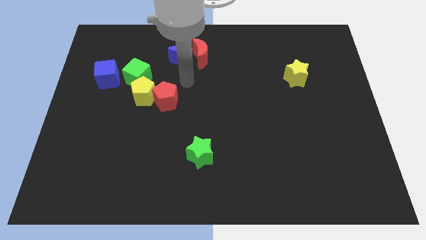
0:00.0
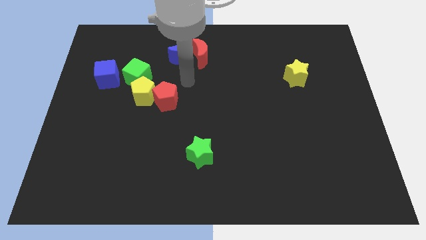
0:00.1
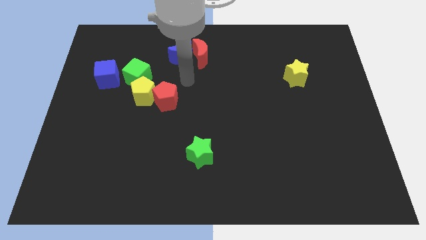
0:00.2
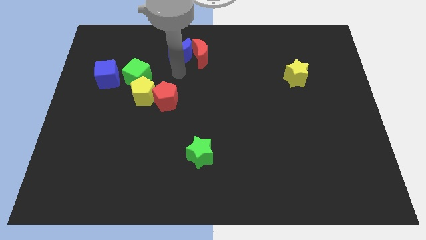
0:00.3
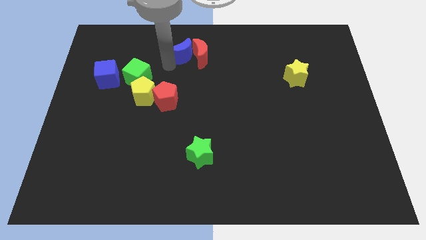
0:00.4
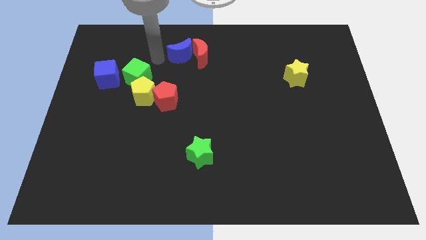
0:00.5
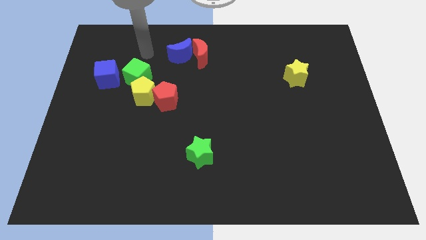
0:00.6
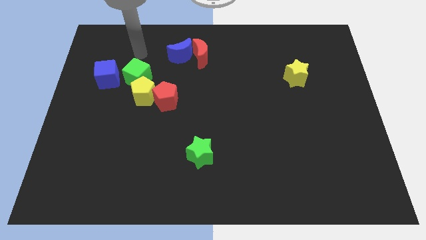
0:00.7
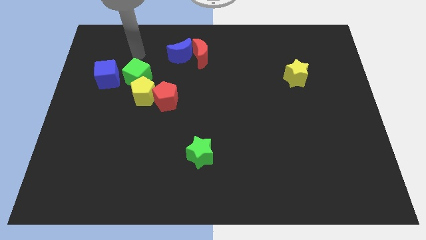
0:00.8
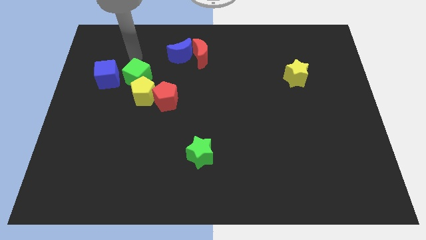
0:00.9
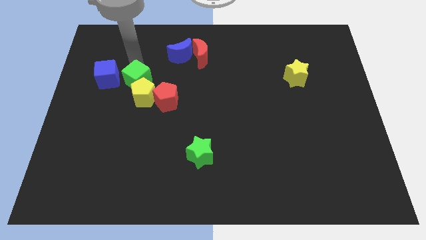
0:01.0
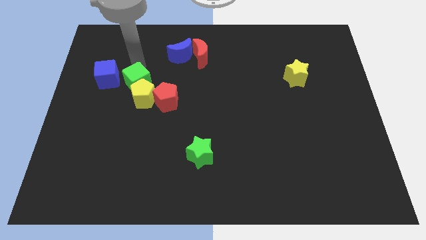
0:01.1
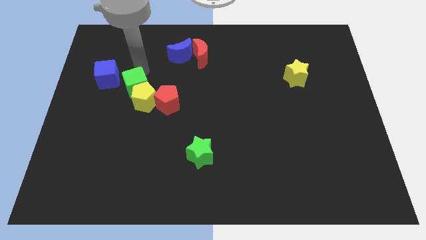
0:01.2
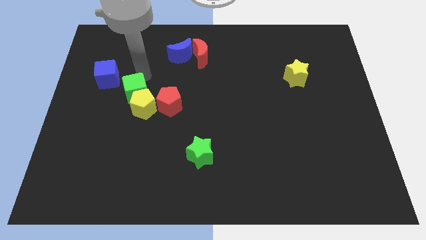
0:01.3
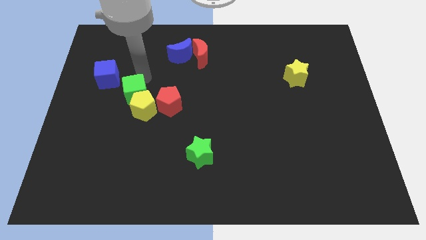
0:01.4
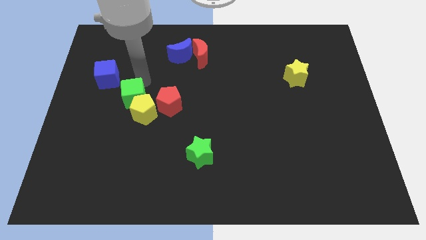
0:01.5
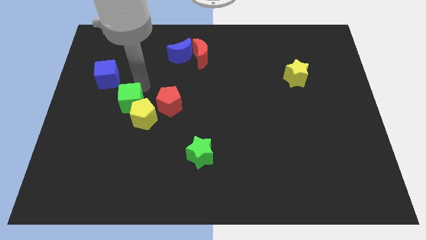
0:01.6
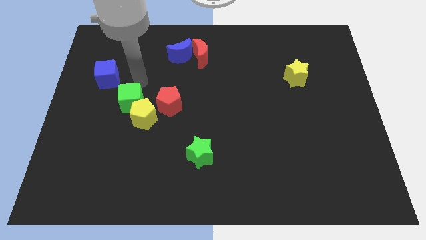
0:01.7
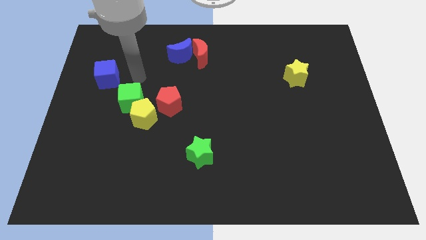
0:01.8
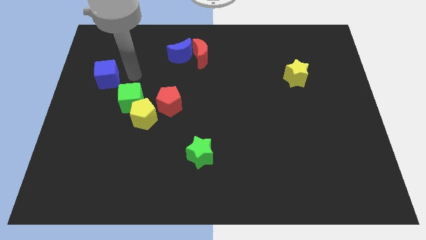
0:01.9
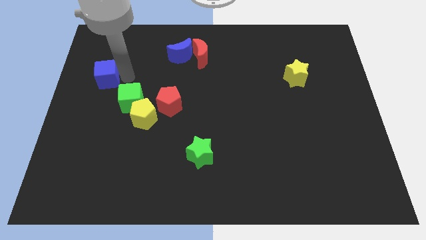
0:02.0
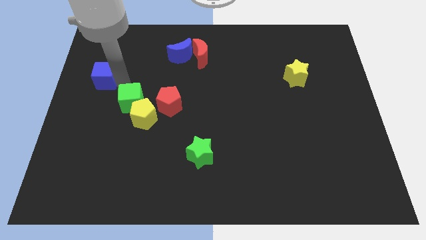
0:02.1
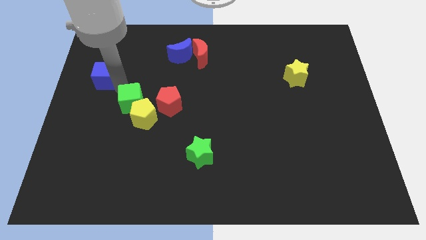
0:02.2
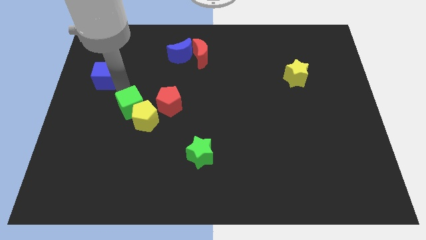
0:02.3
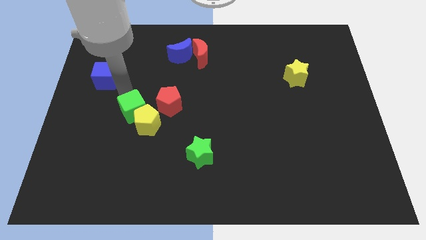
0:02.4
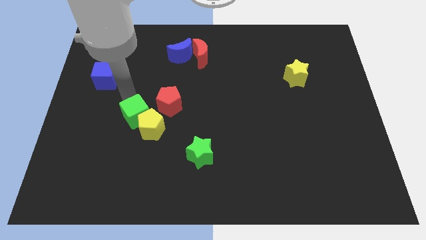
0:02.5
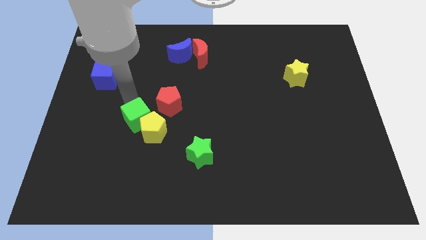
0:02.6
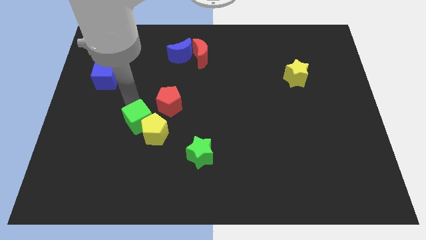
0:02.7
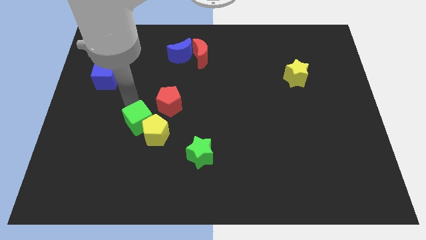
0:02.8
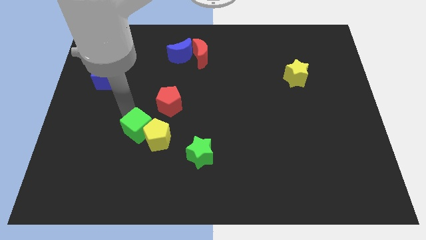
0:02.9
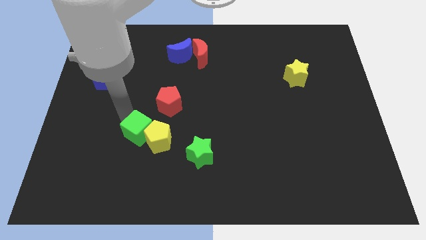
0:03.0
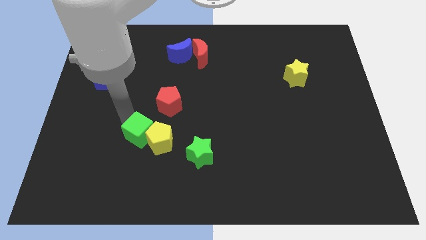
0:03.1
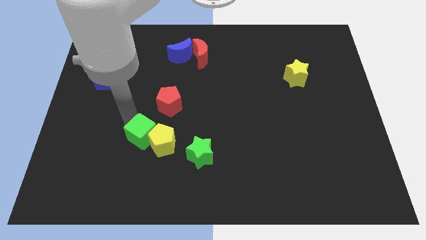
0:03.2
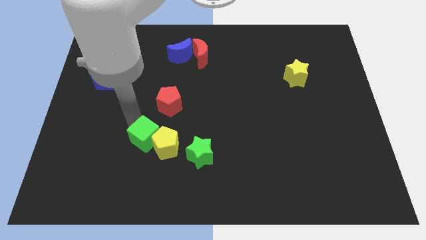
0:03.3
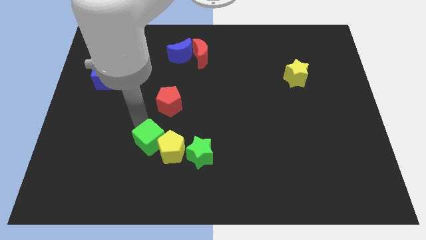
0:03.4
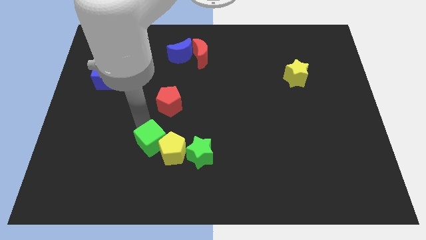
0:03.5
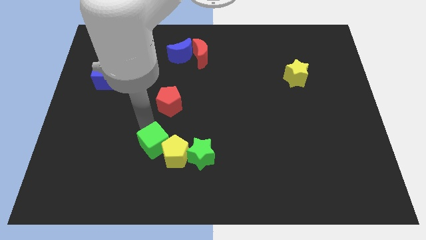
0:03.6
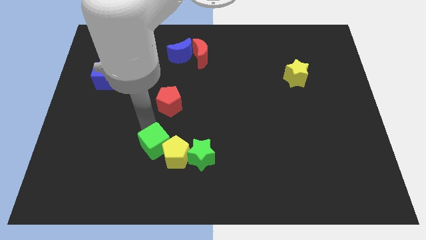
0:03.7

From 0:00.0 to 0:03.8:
slide the green cube and the yellow pentagon towards the bottom center

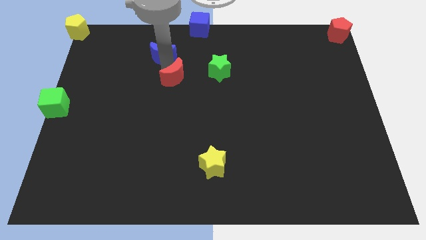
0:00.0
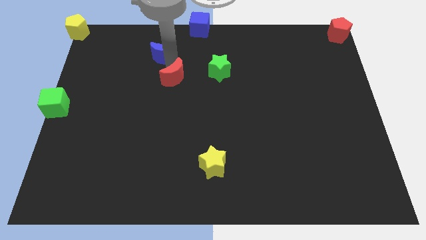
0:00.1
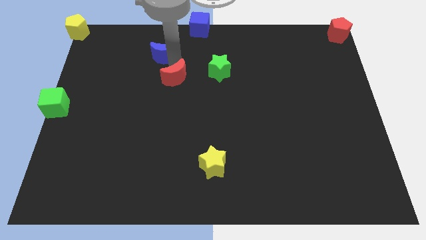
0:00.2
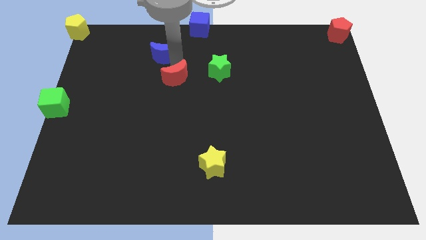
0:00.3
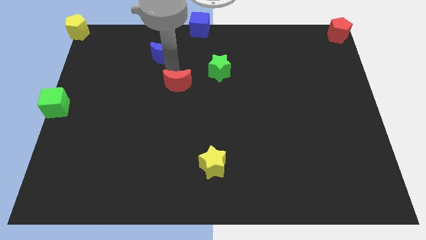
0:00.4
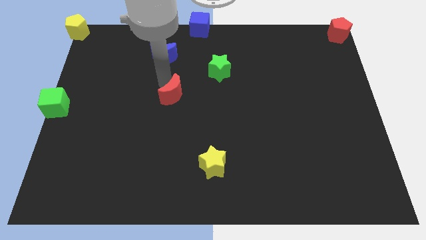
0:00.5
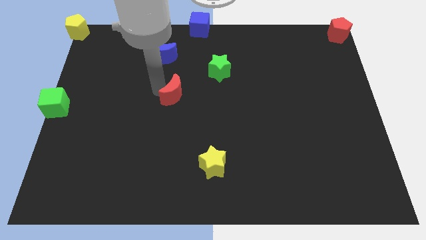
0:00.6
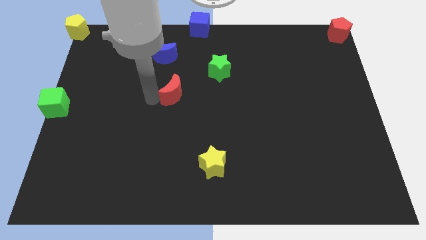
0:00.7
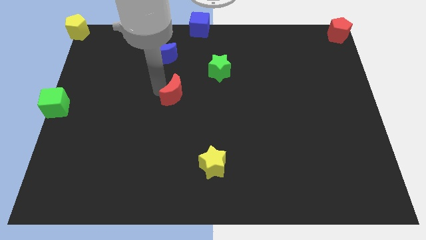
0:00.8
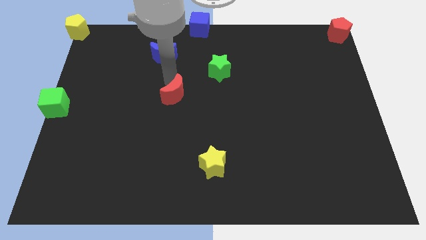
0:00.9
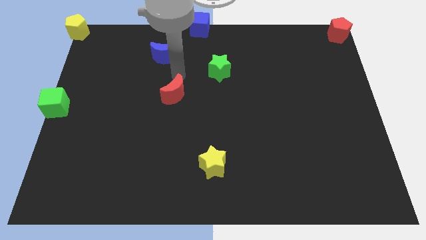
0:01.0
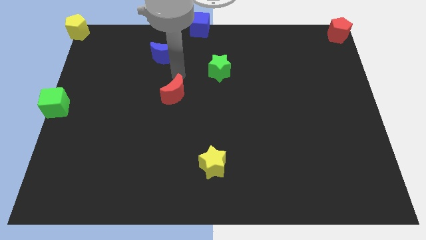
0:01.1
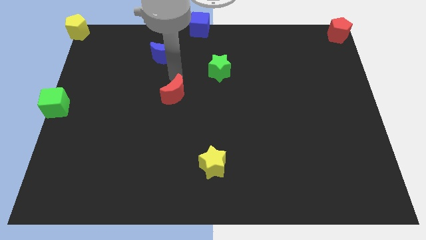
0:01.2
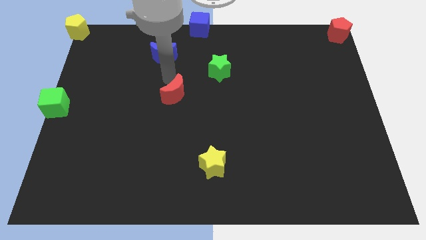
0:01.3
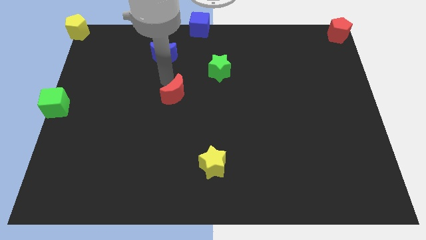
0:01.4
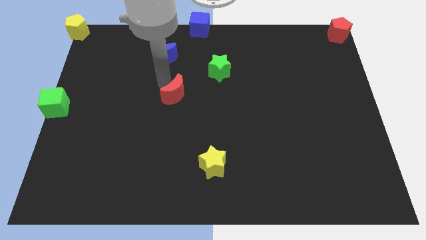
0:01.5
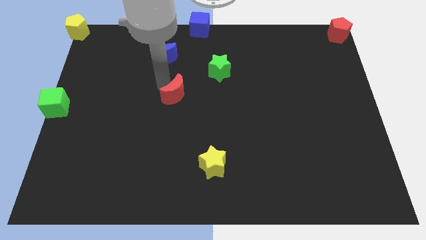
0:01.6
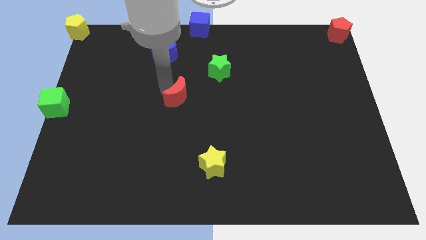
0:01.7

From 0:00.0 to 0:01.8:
separate the red moon from the blue moon

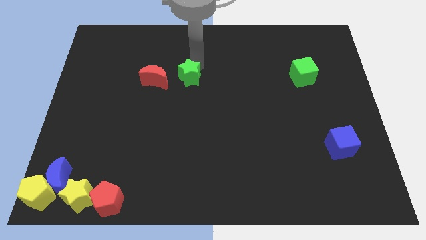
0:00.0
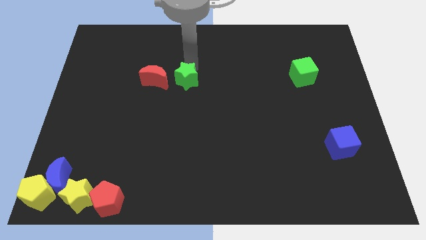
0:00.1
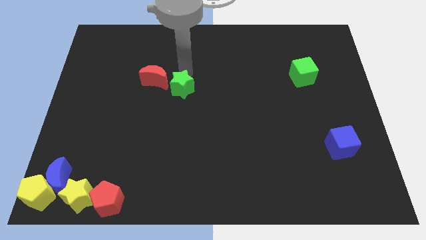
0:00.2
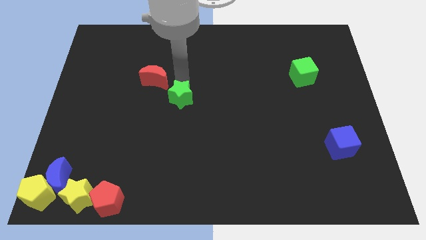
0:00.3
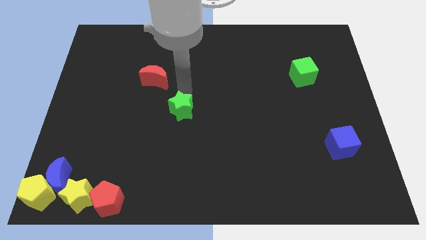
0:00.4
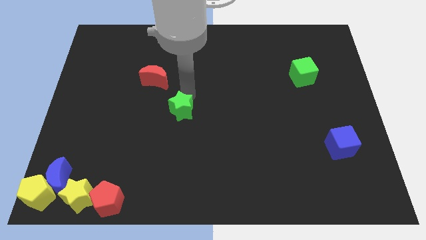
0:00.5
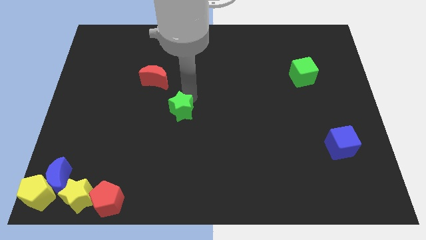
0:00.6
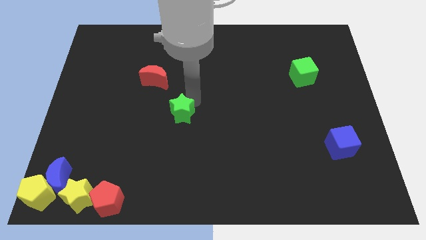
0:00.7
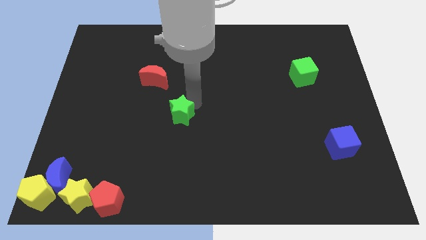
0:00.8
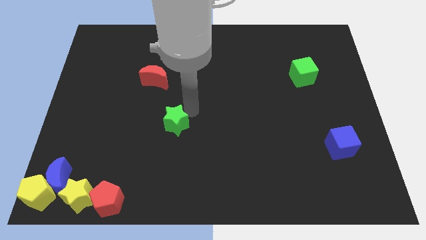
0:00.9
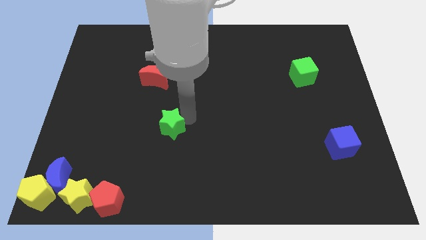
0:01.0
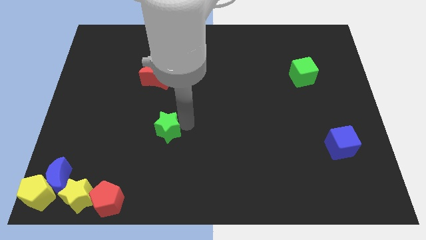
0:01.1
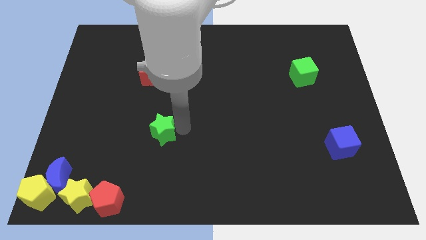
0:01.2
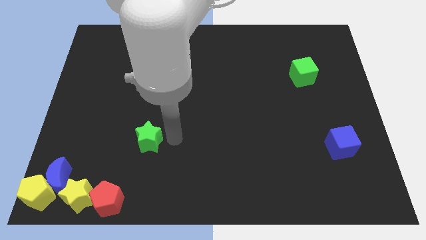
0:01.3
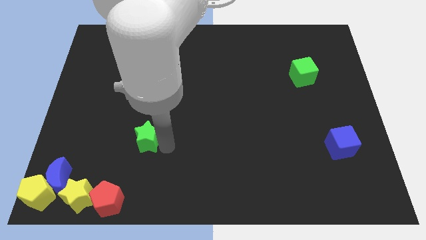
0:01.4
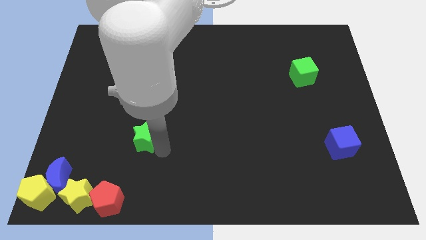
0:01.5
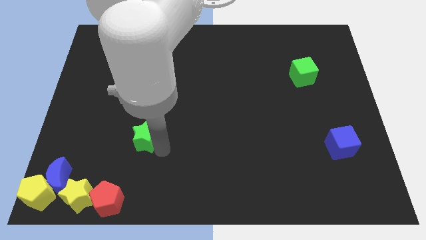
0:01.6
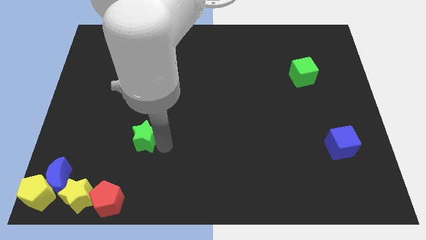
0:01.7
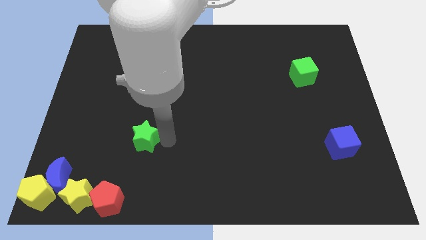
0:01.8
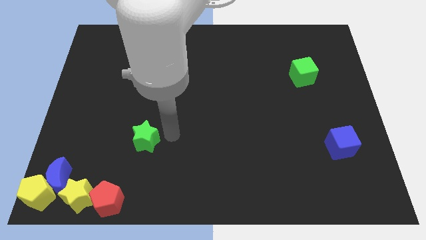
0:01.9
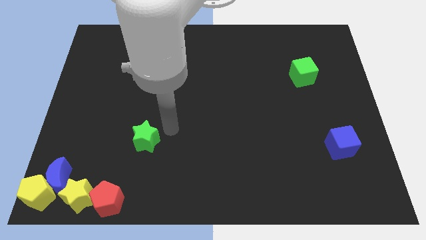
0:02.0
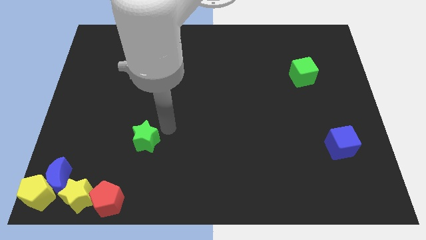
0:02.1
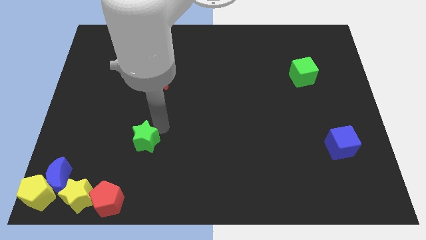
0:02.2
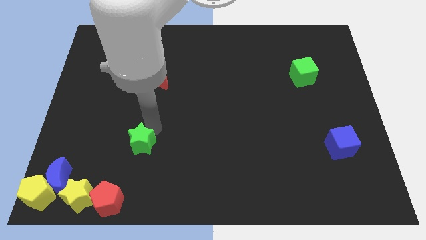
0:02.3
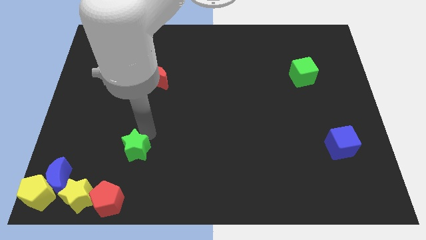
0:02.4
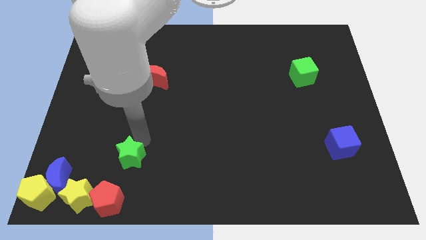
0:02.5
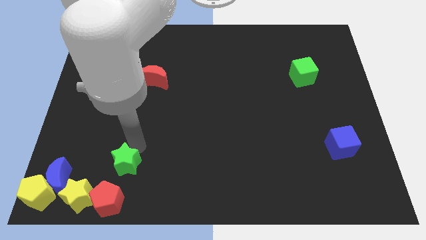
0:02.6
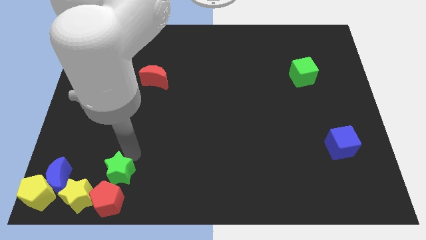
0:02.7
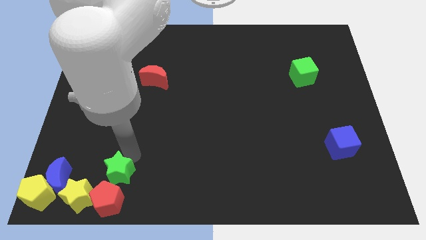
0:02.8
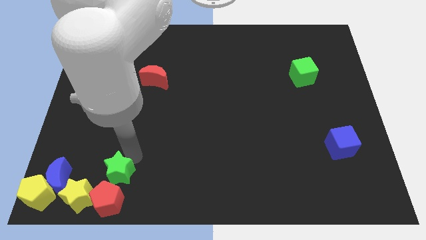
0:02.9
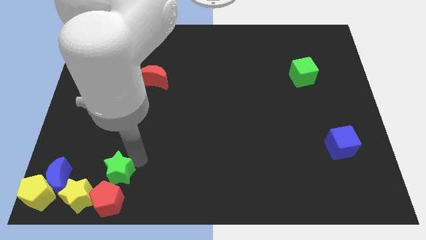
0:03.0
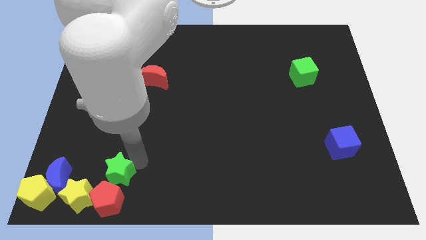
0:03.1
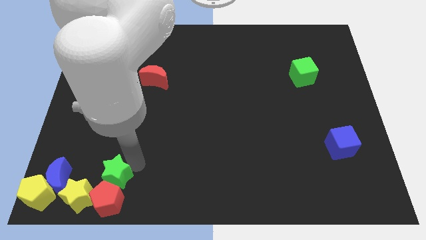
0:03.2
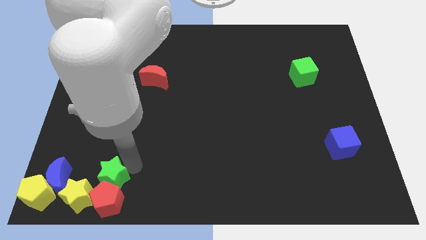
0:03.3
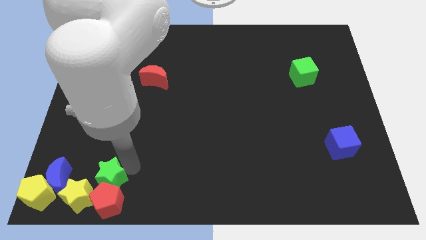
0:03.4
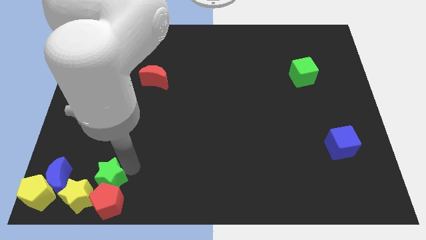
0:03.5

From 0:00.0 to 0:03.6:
push the green star into the red pentagon
